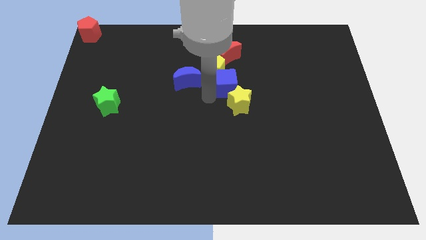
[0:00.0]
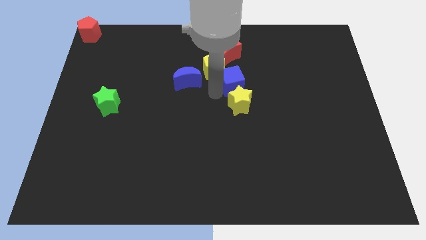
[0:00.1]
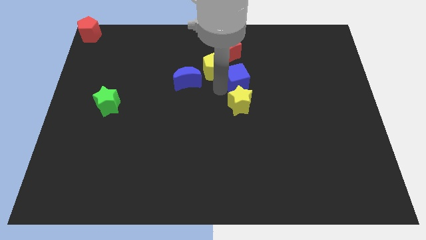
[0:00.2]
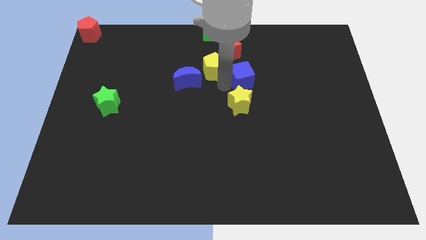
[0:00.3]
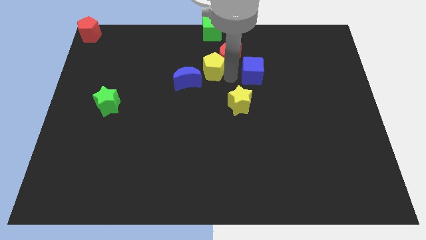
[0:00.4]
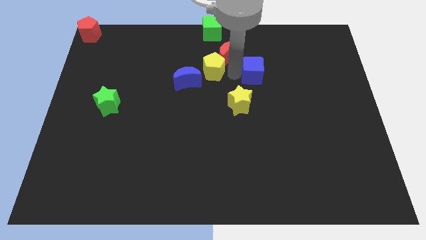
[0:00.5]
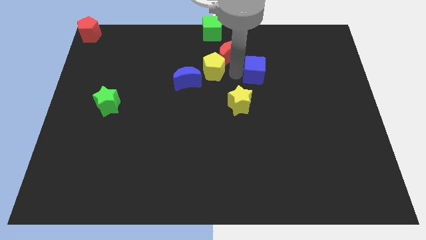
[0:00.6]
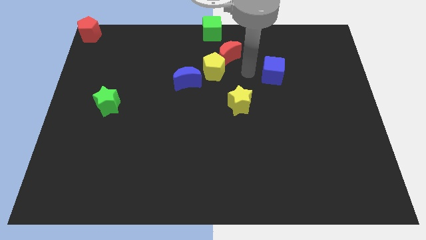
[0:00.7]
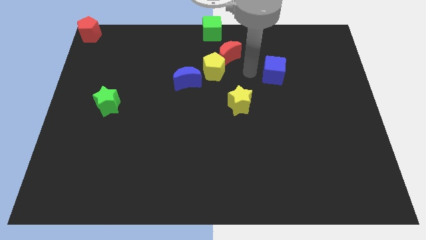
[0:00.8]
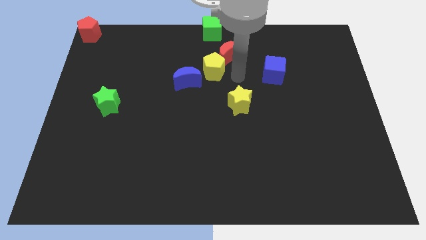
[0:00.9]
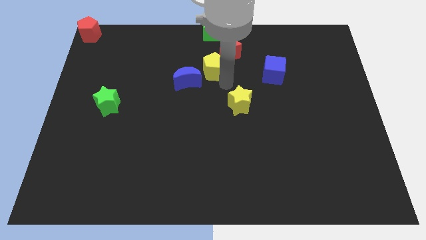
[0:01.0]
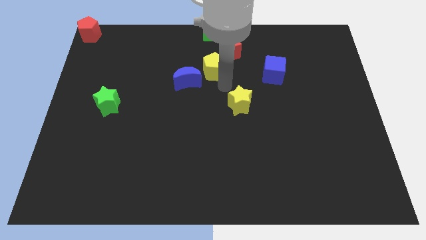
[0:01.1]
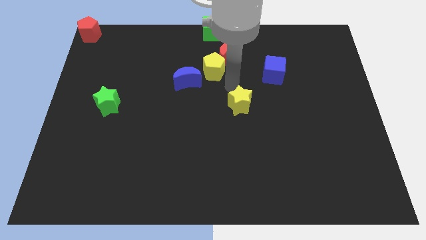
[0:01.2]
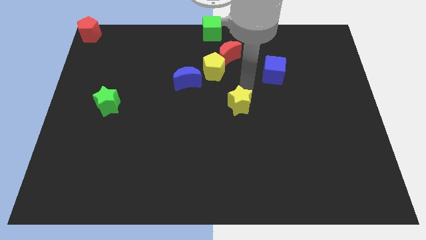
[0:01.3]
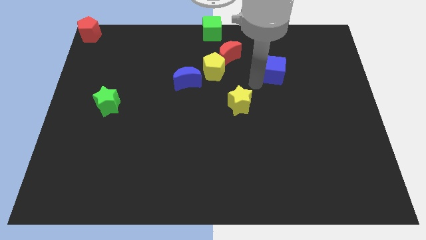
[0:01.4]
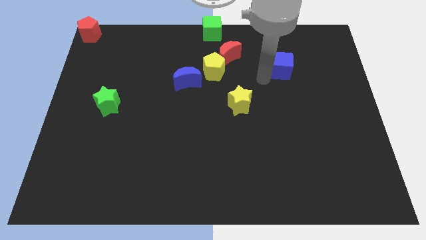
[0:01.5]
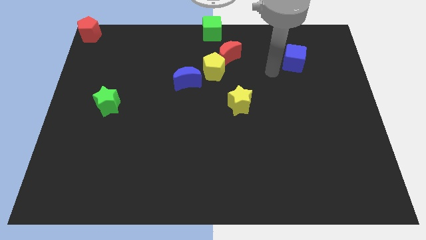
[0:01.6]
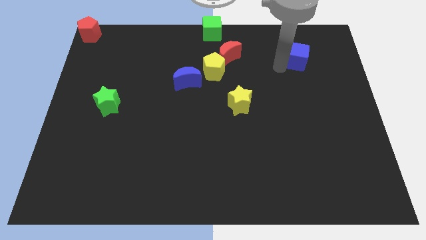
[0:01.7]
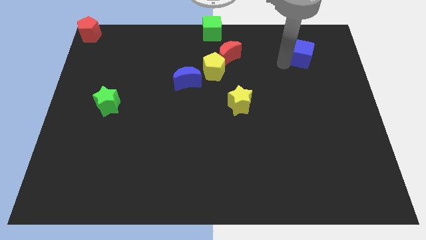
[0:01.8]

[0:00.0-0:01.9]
move the blue cube towards the top right corner of the board

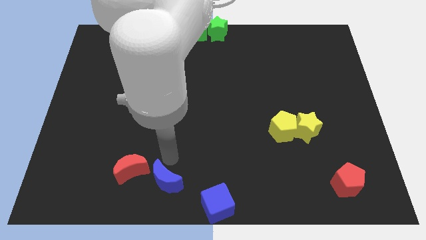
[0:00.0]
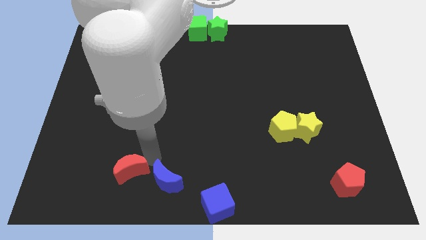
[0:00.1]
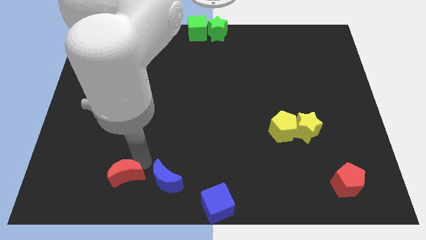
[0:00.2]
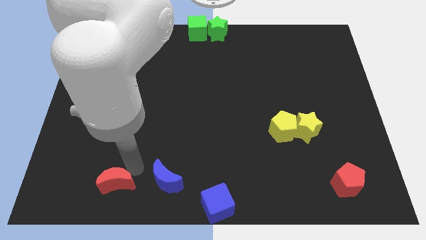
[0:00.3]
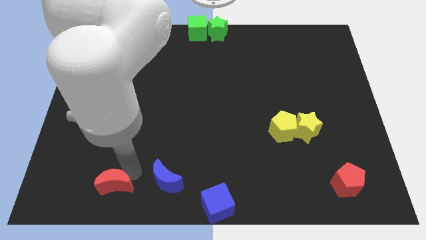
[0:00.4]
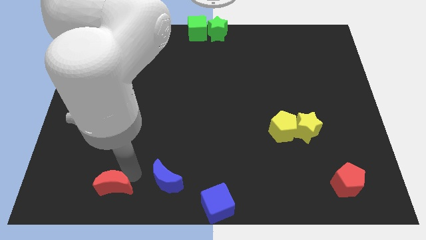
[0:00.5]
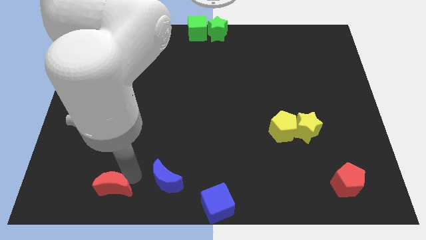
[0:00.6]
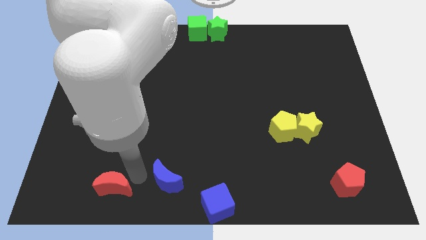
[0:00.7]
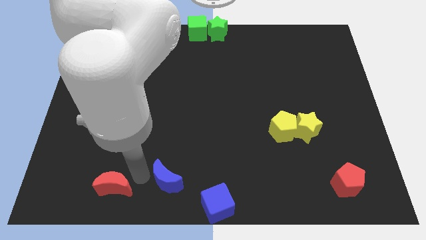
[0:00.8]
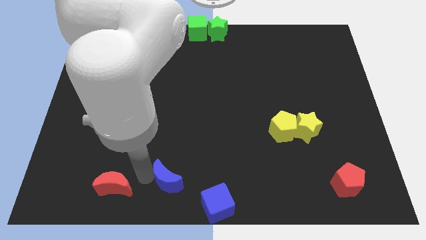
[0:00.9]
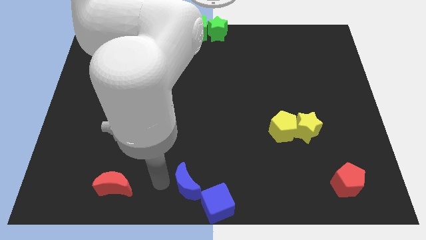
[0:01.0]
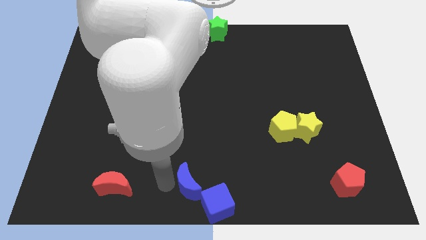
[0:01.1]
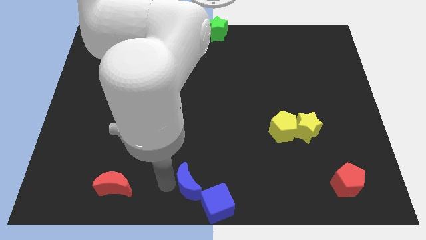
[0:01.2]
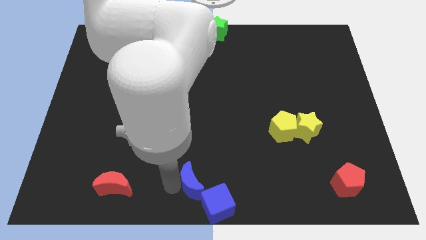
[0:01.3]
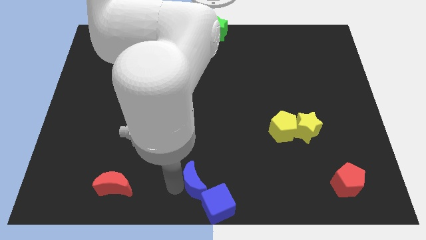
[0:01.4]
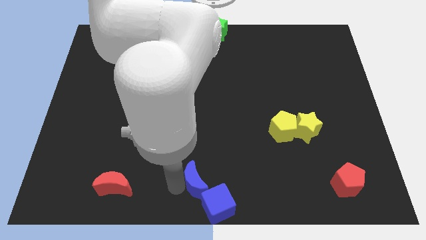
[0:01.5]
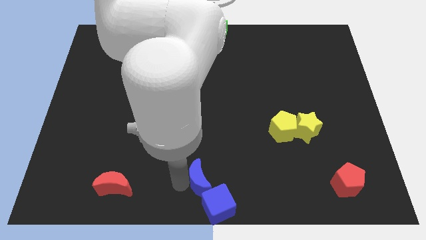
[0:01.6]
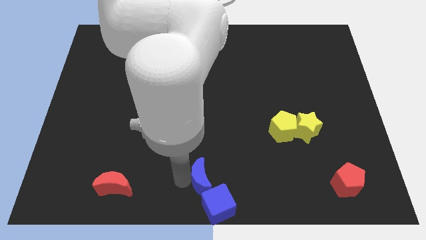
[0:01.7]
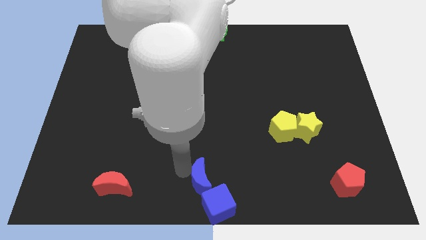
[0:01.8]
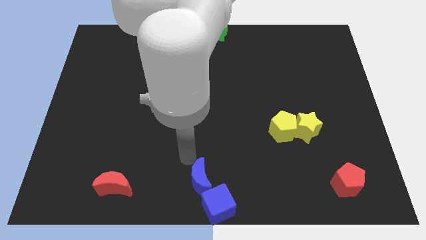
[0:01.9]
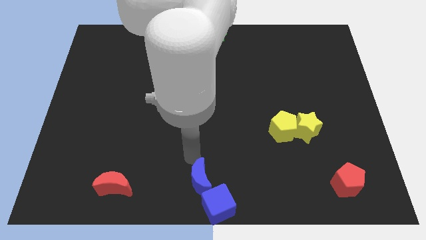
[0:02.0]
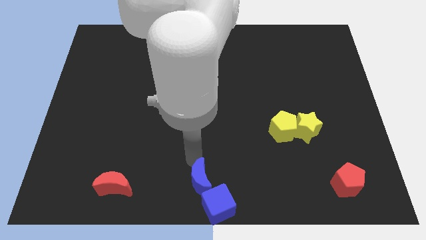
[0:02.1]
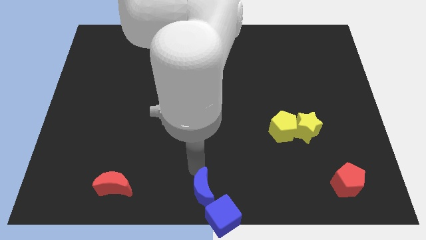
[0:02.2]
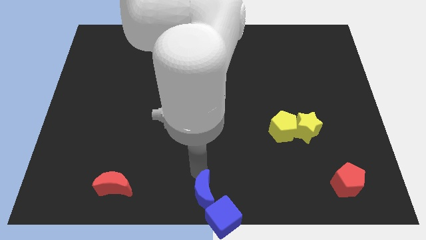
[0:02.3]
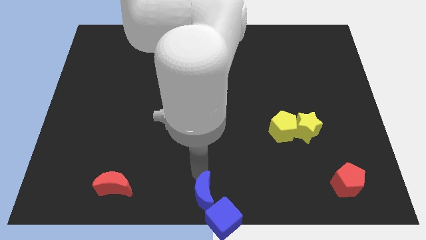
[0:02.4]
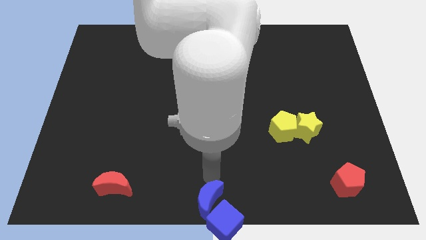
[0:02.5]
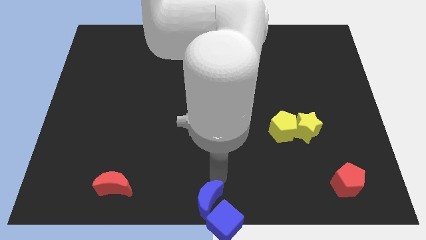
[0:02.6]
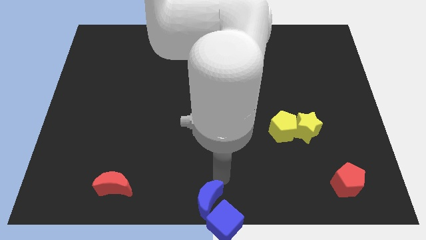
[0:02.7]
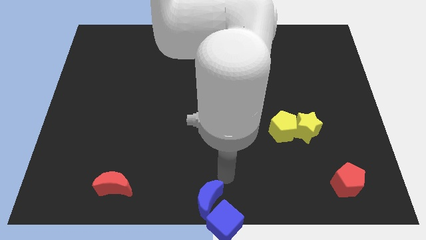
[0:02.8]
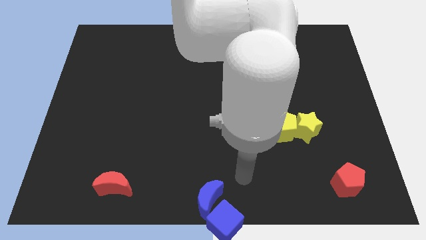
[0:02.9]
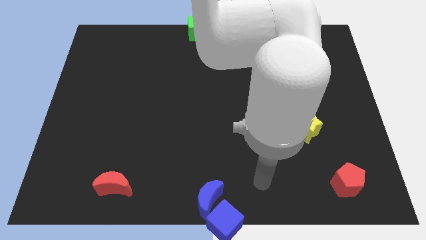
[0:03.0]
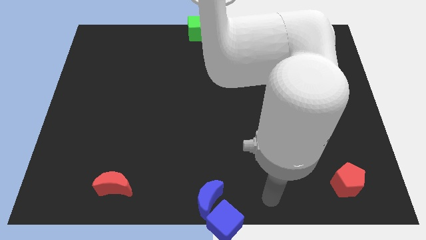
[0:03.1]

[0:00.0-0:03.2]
place blue crescent above blue cube

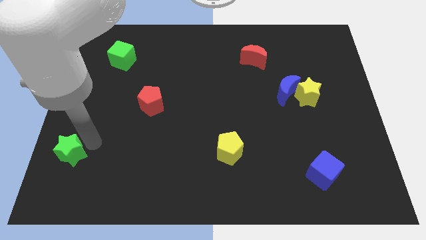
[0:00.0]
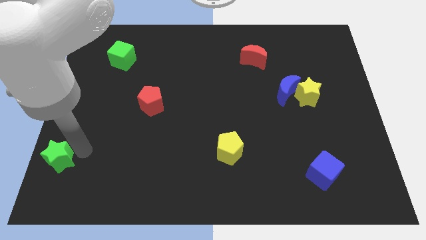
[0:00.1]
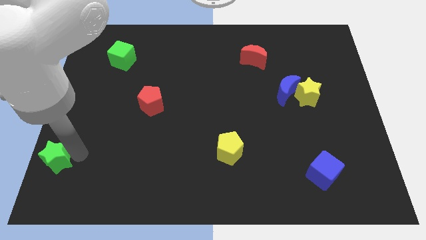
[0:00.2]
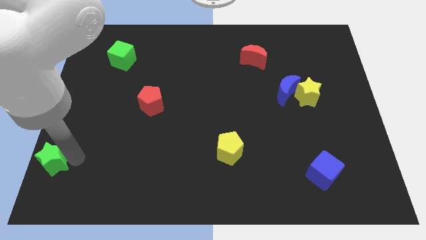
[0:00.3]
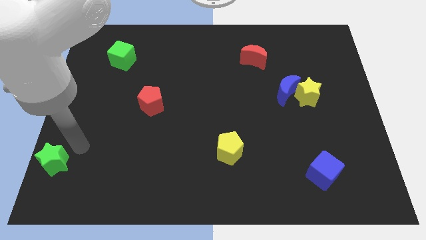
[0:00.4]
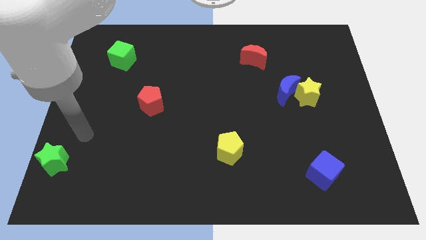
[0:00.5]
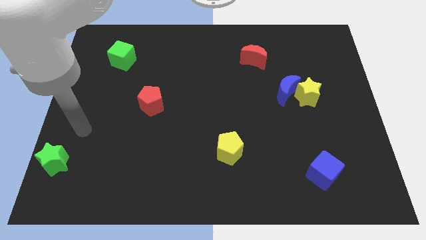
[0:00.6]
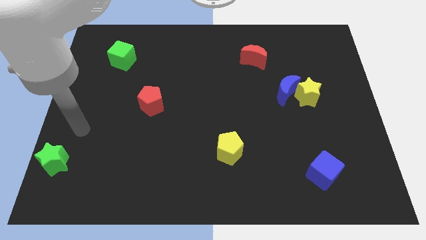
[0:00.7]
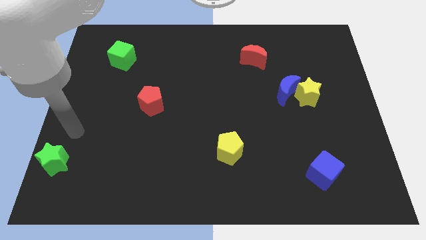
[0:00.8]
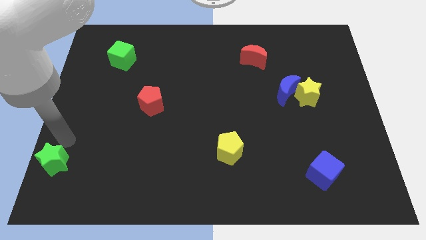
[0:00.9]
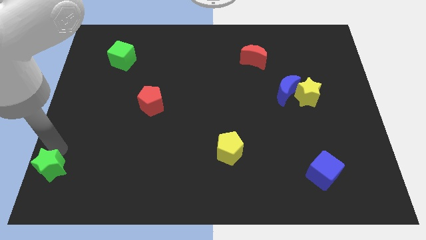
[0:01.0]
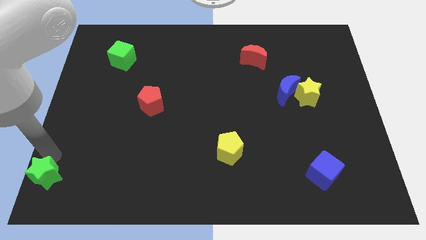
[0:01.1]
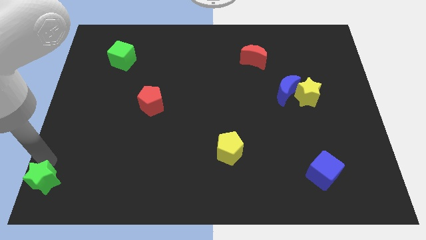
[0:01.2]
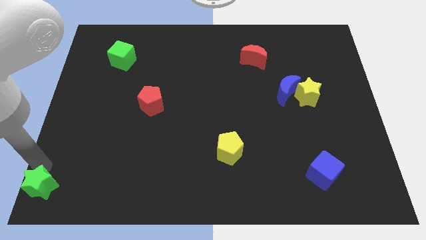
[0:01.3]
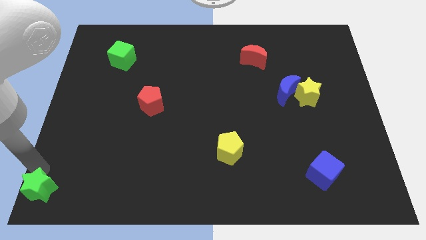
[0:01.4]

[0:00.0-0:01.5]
place the green star at bottom left side of the board

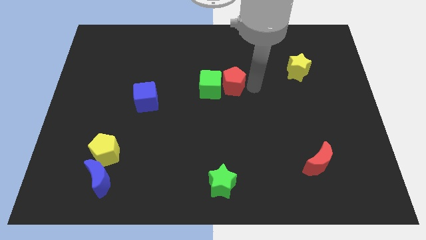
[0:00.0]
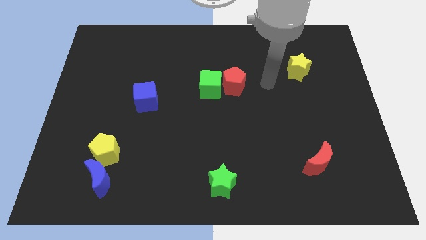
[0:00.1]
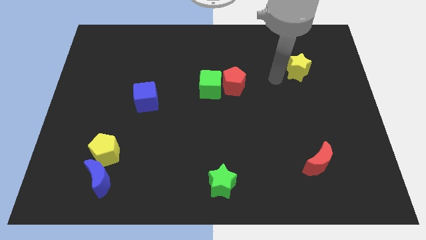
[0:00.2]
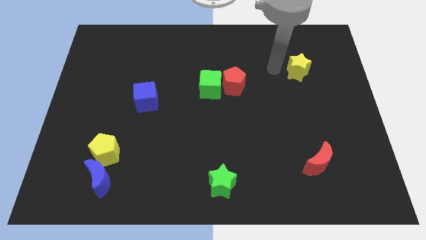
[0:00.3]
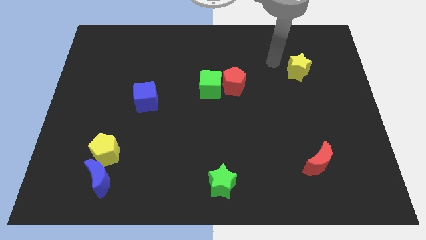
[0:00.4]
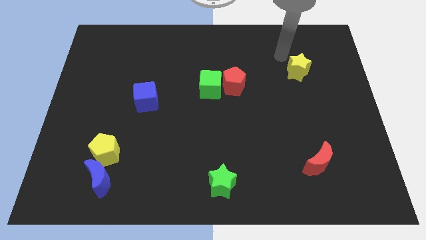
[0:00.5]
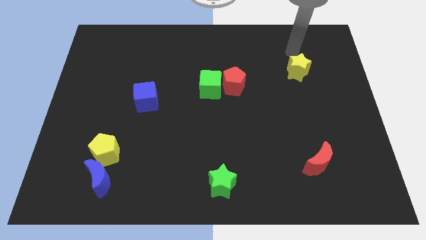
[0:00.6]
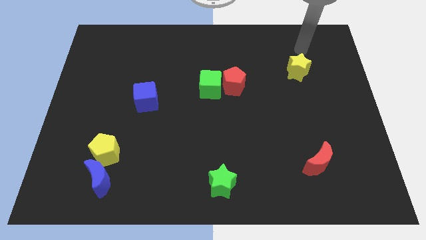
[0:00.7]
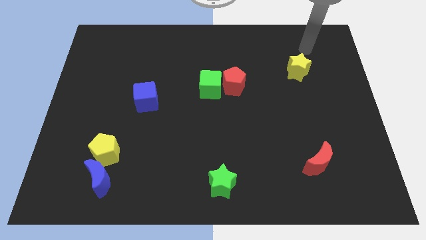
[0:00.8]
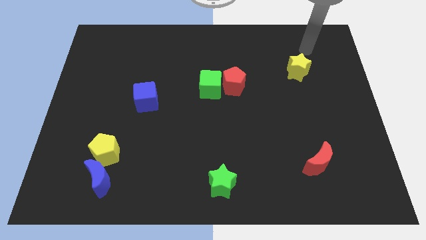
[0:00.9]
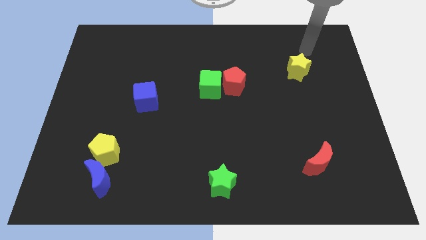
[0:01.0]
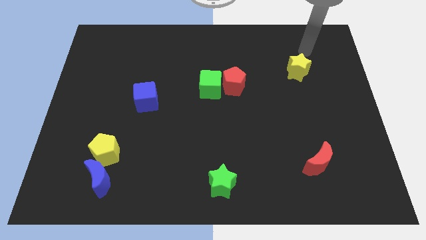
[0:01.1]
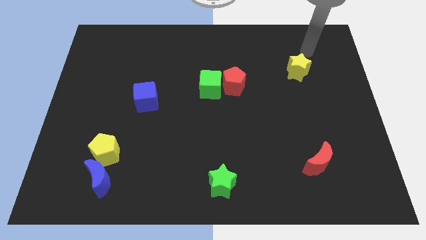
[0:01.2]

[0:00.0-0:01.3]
move your arm away from red pentagon

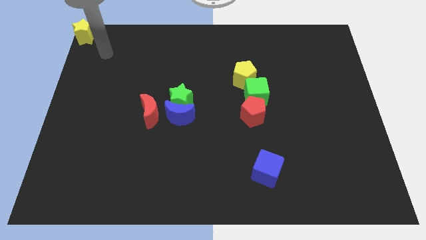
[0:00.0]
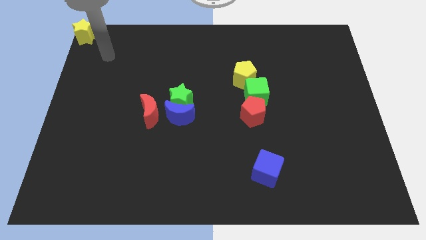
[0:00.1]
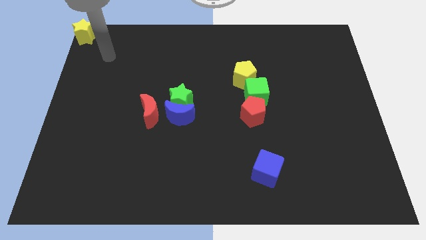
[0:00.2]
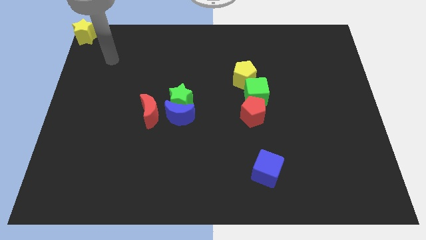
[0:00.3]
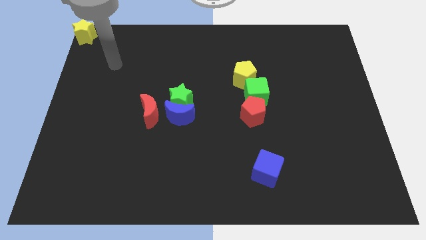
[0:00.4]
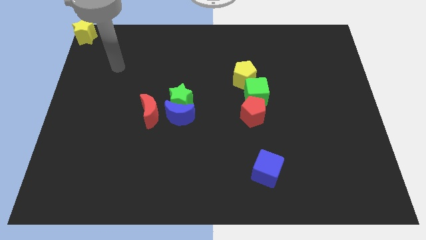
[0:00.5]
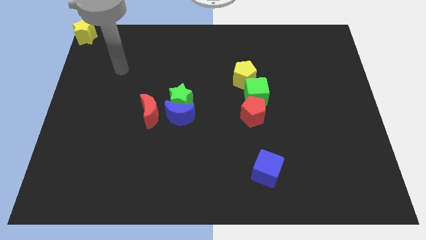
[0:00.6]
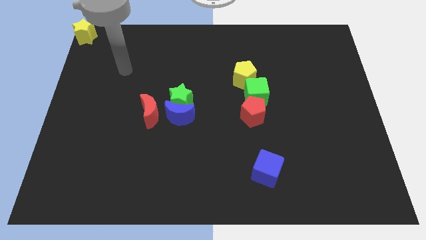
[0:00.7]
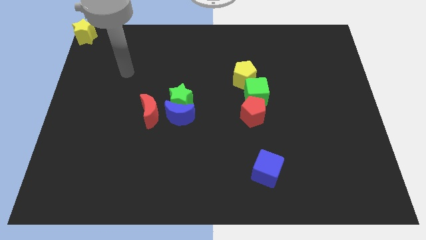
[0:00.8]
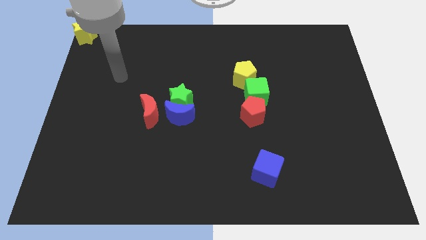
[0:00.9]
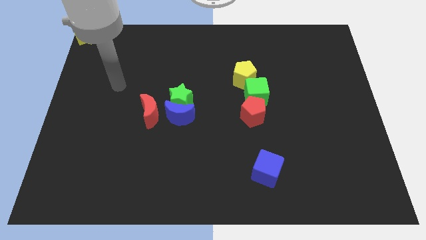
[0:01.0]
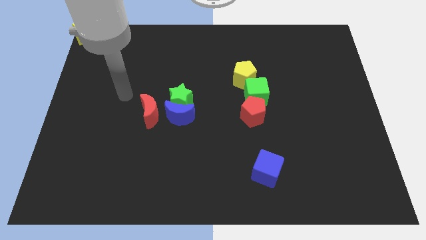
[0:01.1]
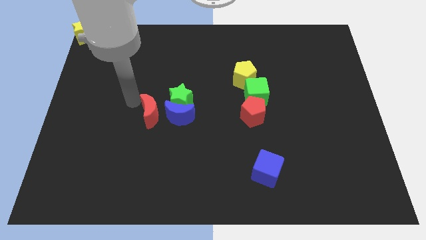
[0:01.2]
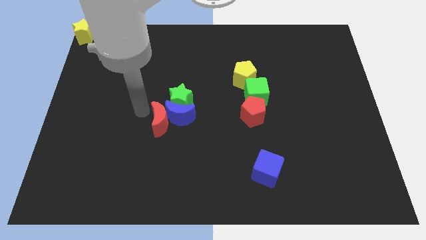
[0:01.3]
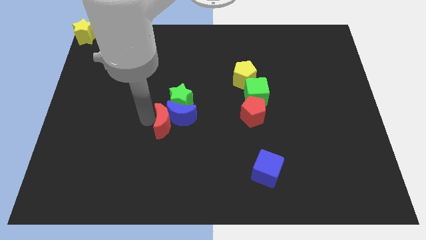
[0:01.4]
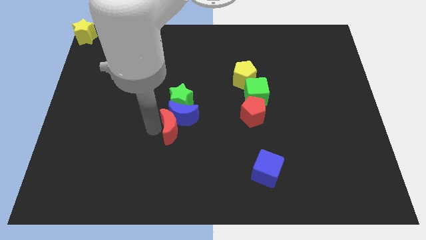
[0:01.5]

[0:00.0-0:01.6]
push the red moon towards the blue moon
